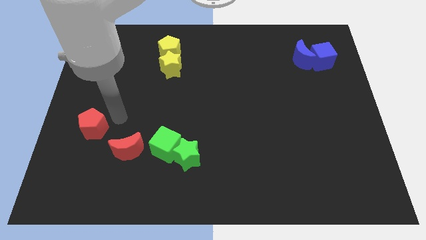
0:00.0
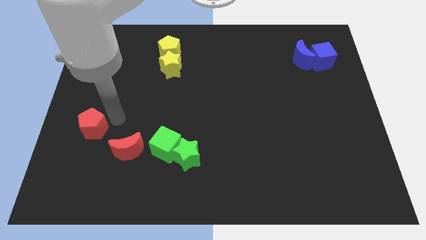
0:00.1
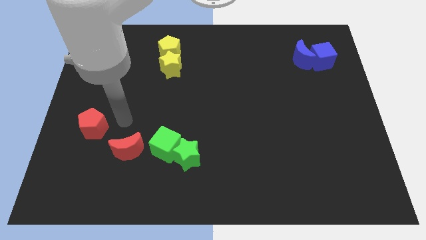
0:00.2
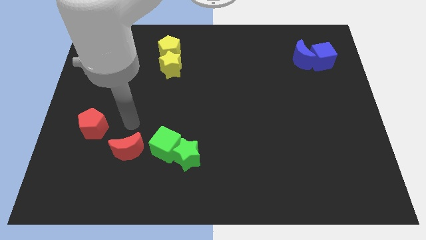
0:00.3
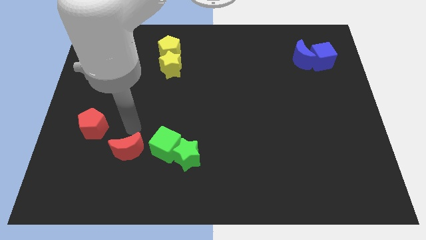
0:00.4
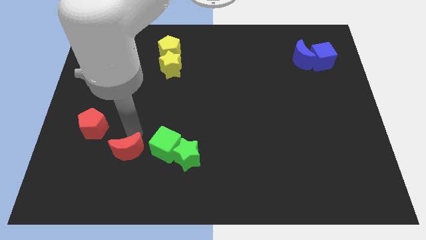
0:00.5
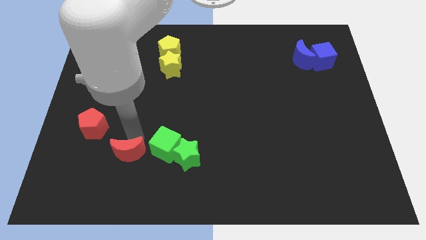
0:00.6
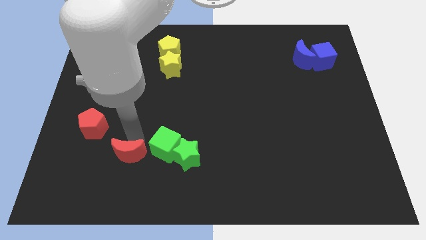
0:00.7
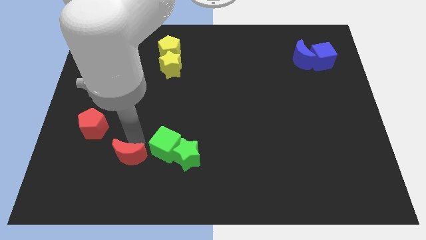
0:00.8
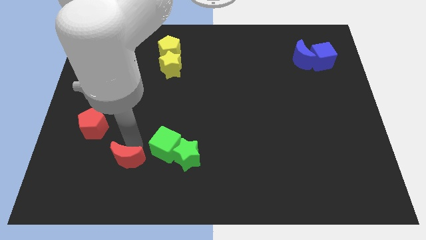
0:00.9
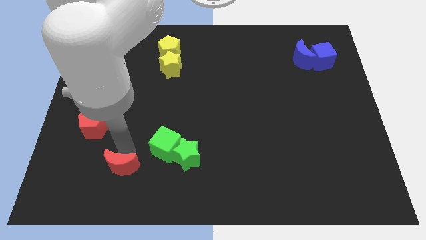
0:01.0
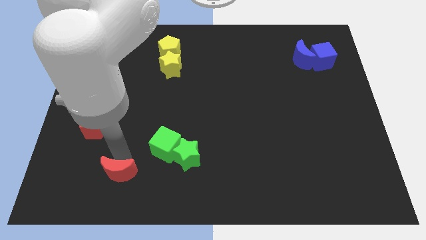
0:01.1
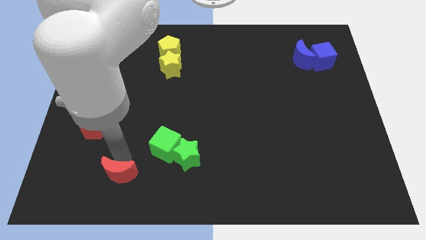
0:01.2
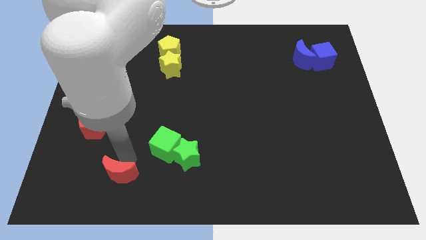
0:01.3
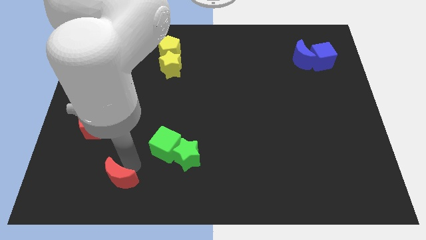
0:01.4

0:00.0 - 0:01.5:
push the red crescent to the bottom left of the green cube

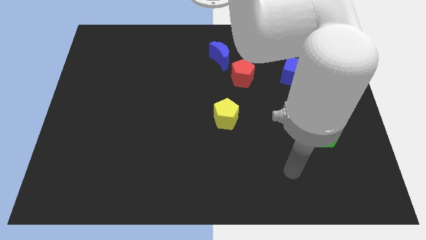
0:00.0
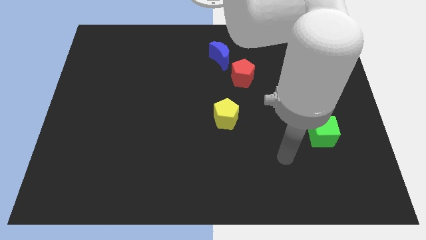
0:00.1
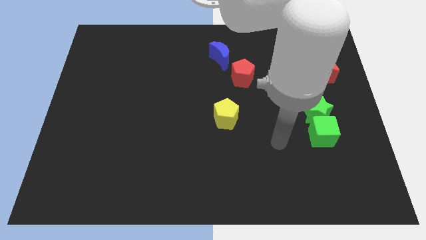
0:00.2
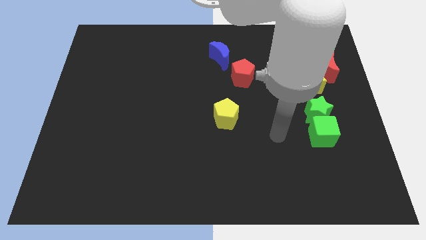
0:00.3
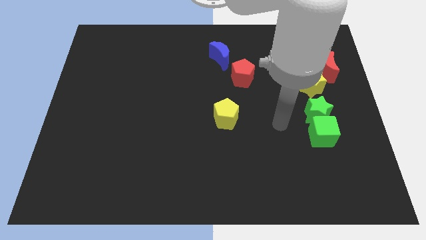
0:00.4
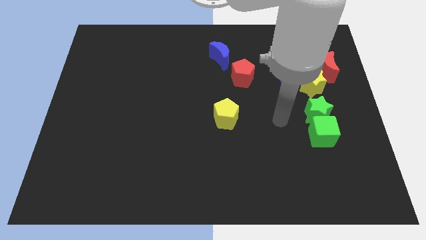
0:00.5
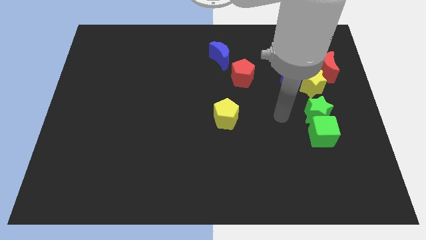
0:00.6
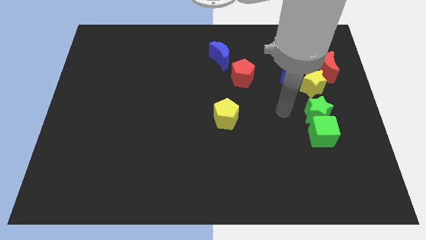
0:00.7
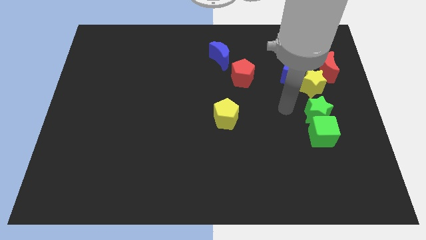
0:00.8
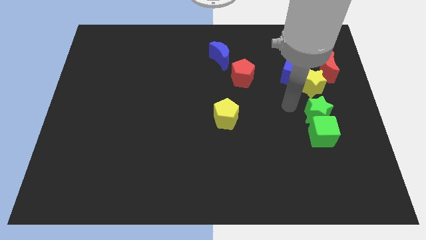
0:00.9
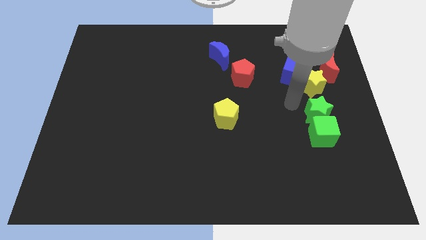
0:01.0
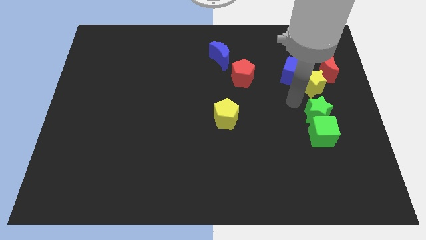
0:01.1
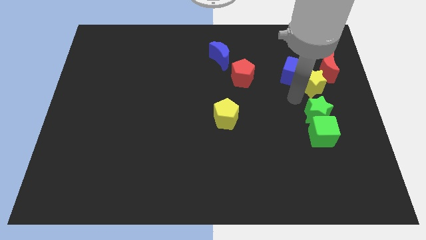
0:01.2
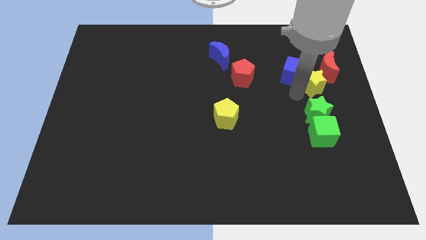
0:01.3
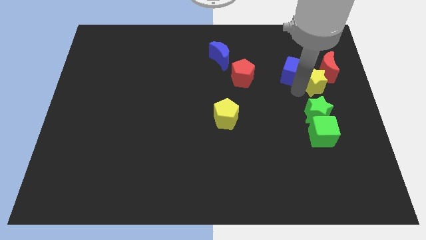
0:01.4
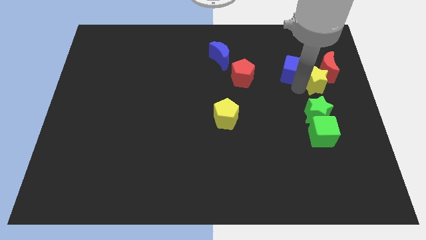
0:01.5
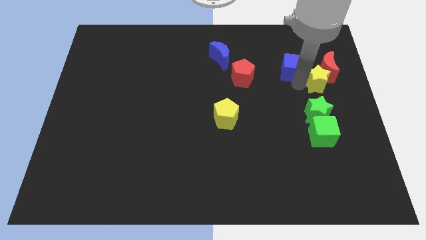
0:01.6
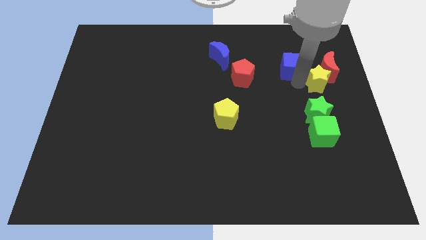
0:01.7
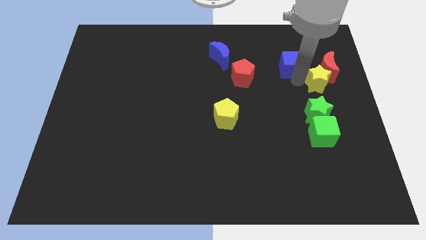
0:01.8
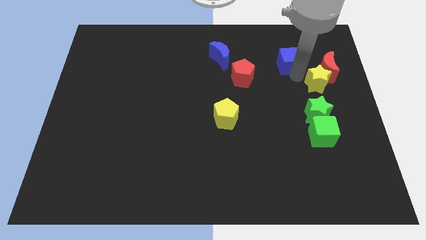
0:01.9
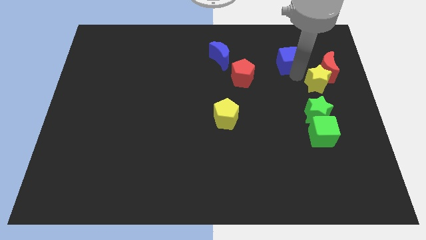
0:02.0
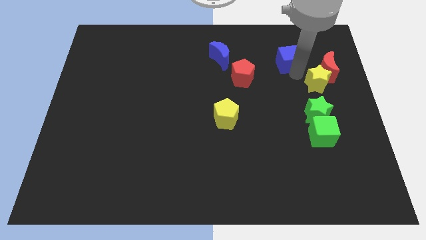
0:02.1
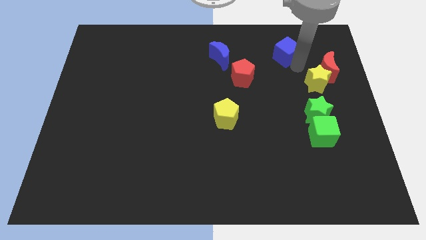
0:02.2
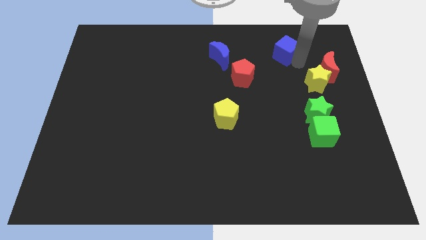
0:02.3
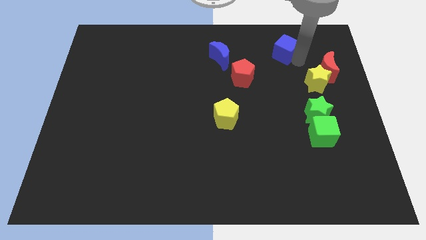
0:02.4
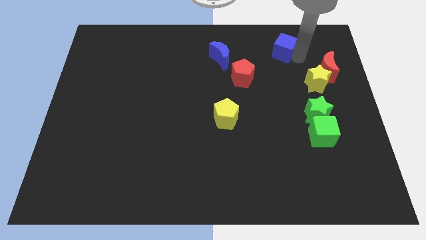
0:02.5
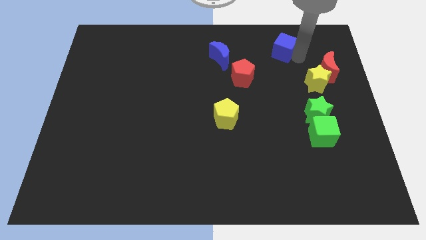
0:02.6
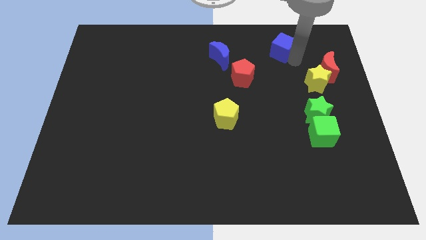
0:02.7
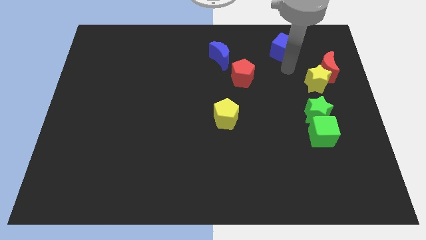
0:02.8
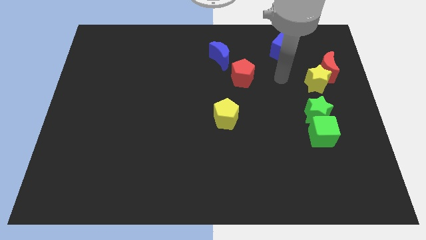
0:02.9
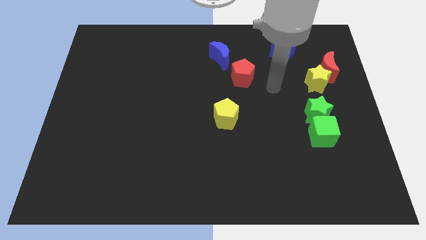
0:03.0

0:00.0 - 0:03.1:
push blue cube towards the top right of the board

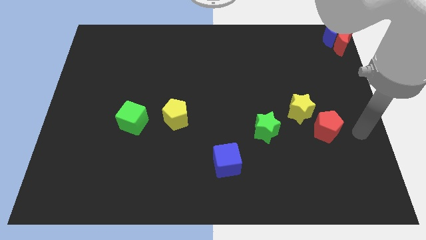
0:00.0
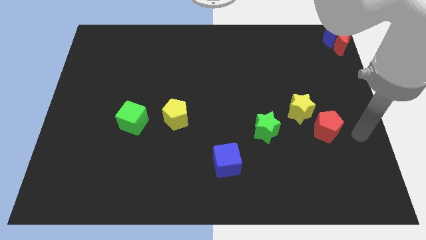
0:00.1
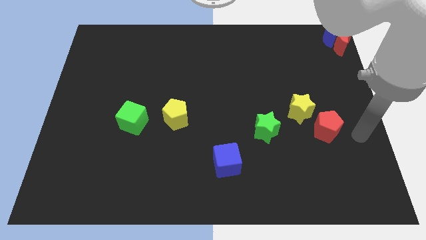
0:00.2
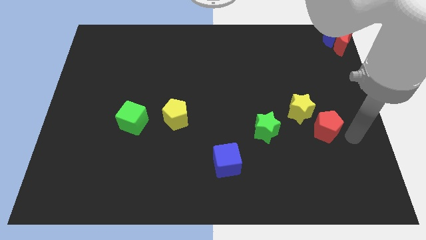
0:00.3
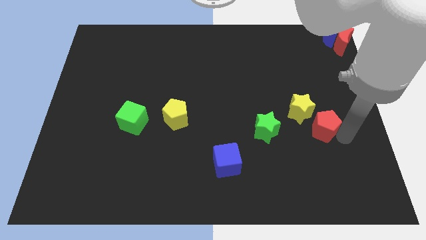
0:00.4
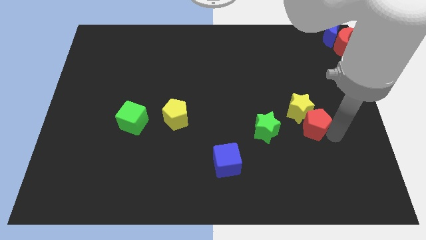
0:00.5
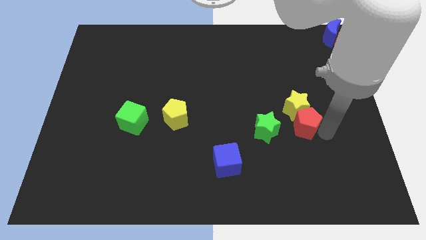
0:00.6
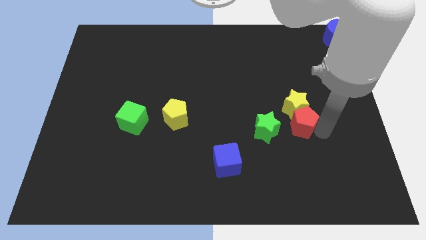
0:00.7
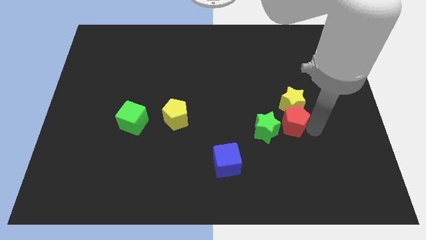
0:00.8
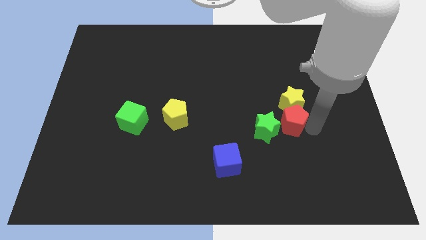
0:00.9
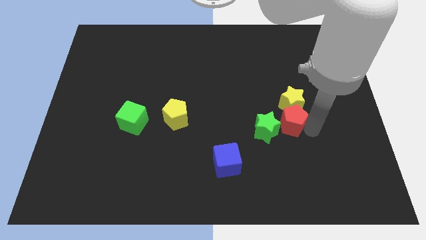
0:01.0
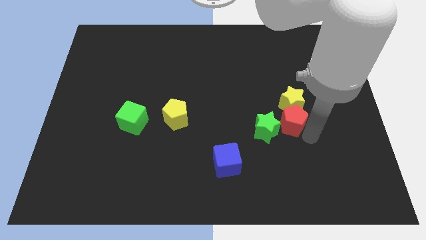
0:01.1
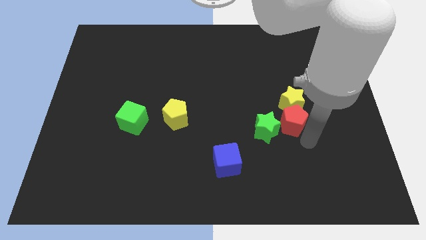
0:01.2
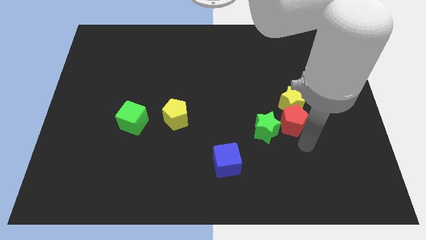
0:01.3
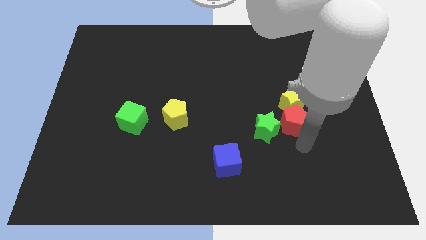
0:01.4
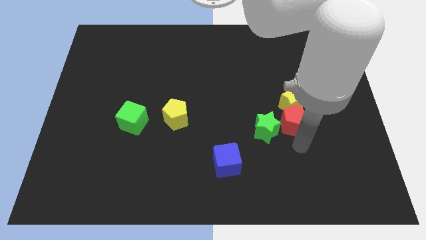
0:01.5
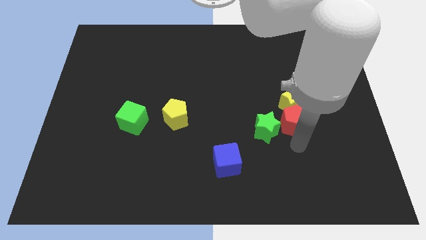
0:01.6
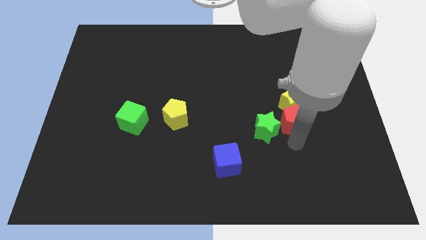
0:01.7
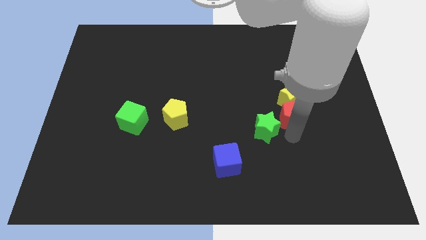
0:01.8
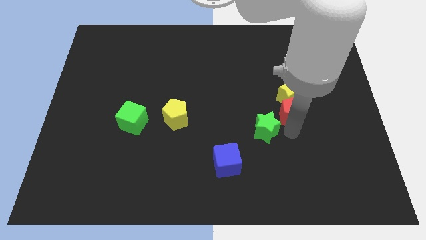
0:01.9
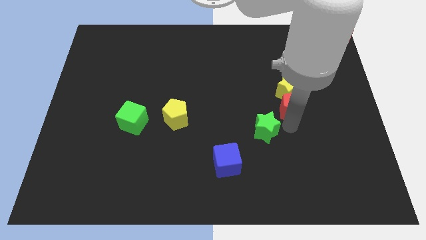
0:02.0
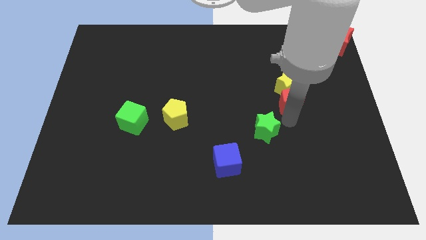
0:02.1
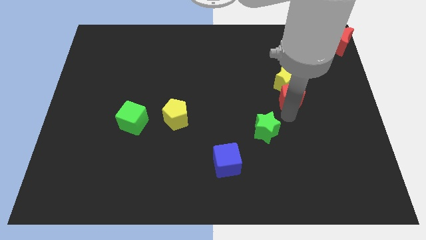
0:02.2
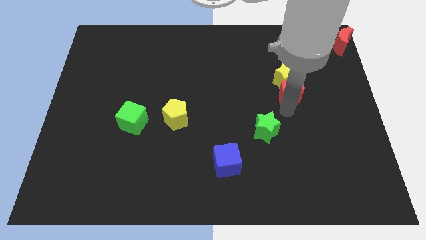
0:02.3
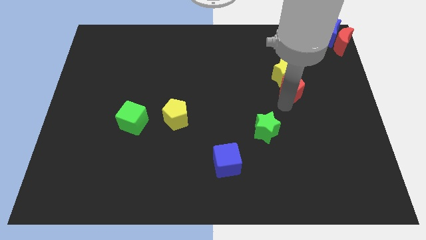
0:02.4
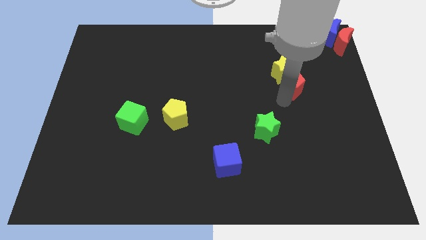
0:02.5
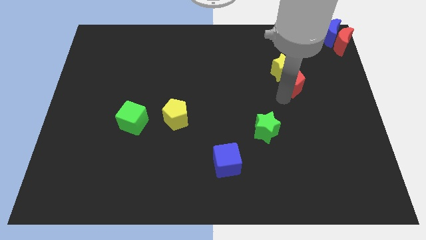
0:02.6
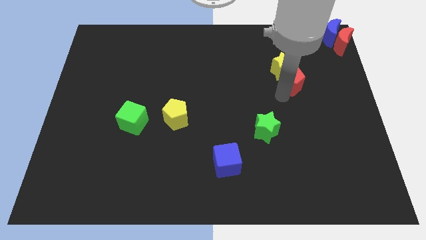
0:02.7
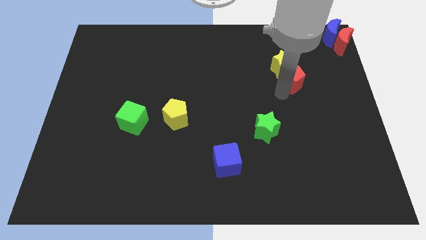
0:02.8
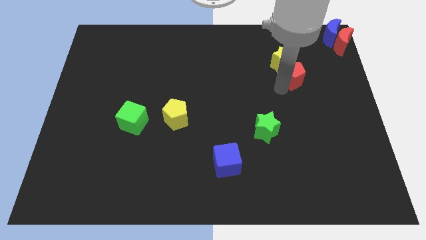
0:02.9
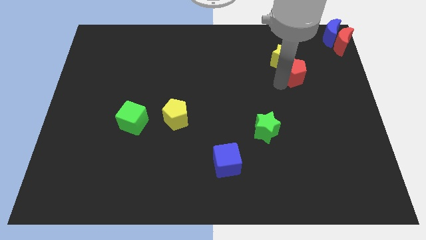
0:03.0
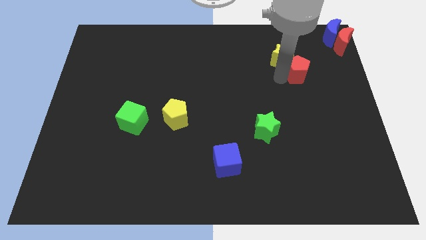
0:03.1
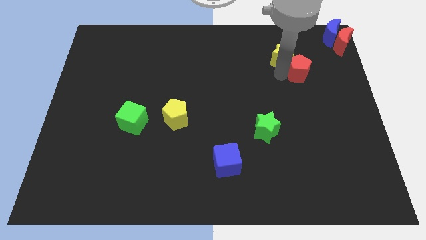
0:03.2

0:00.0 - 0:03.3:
push the yellow star and red pentagon toward top right

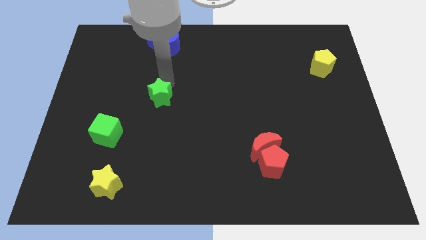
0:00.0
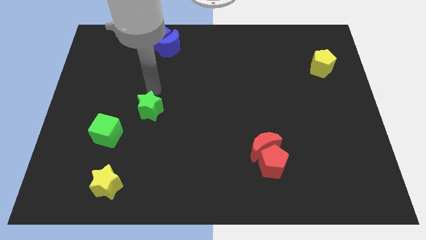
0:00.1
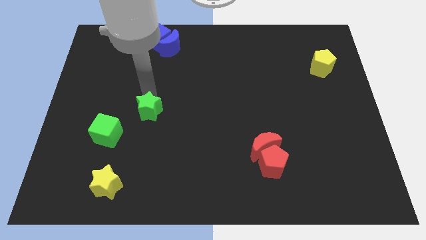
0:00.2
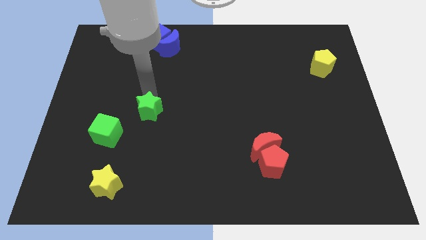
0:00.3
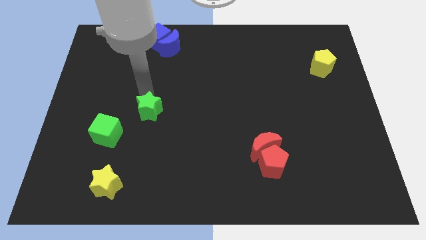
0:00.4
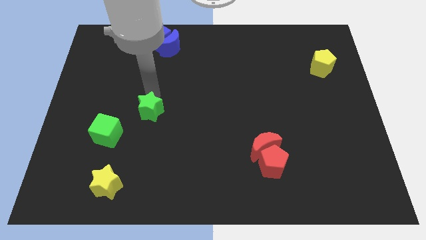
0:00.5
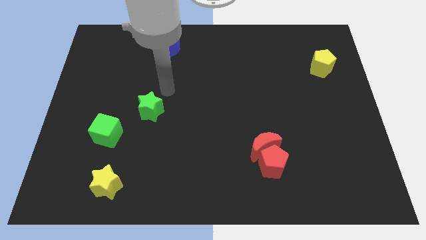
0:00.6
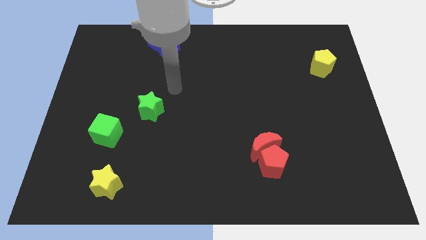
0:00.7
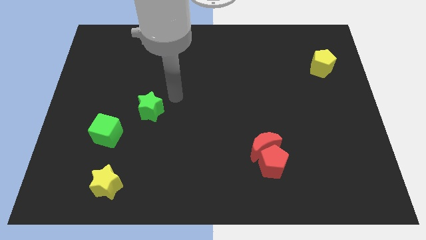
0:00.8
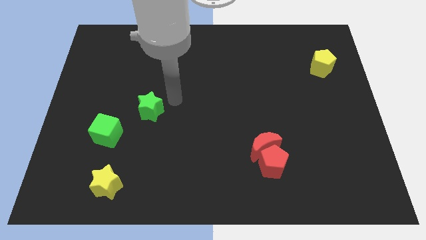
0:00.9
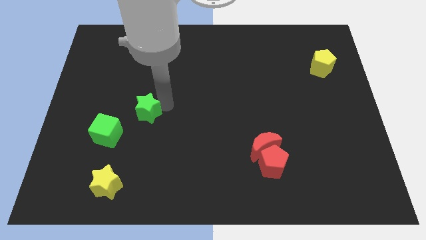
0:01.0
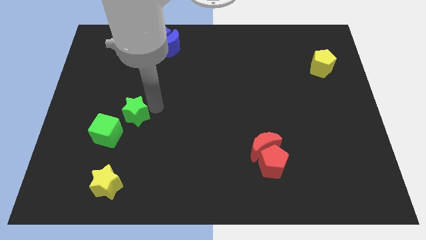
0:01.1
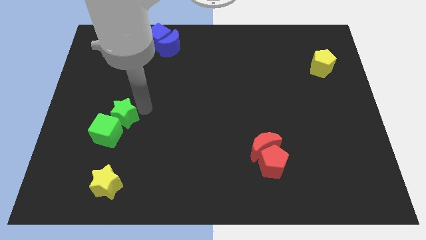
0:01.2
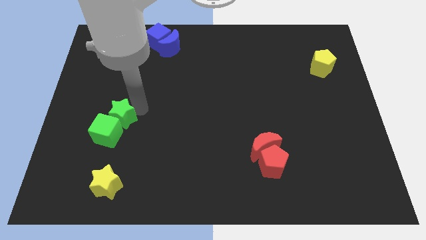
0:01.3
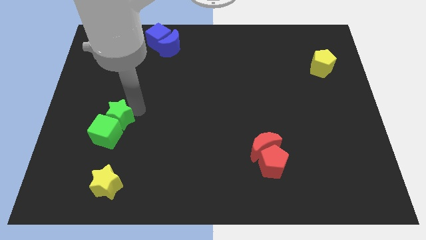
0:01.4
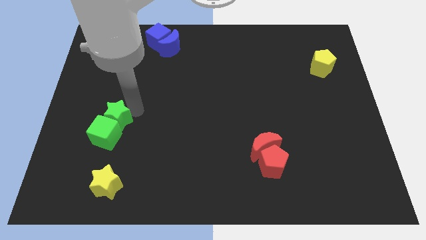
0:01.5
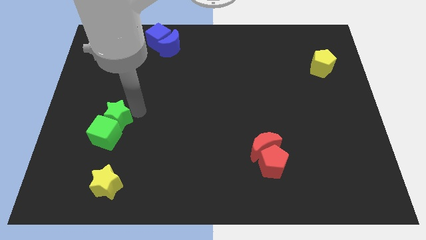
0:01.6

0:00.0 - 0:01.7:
place the green star close to the green cube
